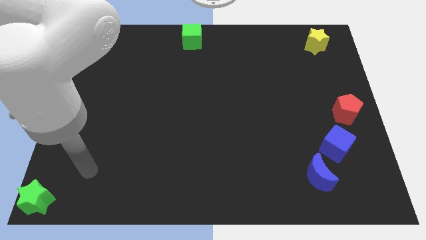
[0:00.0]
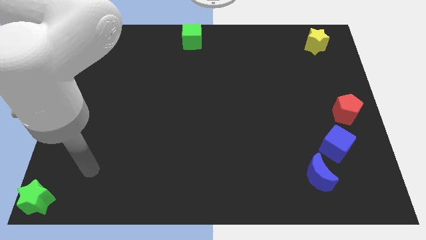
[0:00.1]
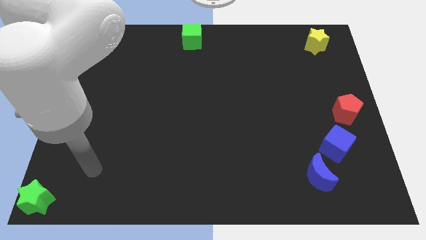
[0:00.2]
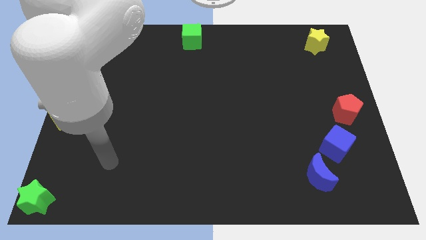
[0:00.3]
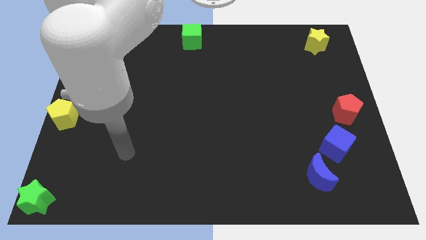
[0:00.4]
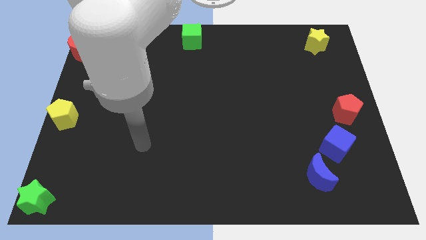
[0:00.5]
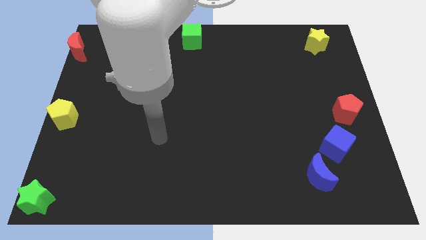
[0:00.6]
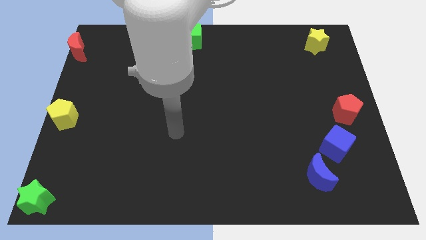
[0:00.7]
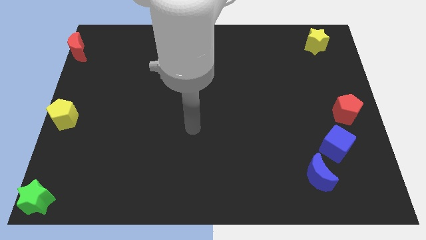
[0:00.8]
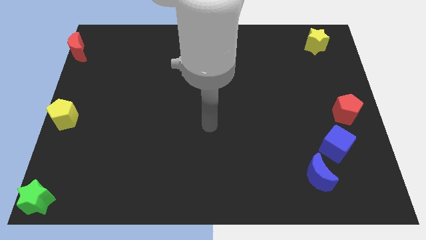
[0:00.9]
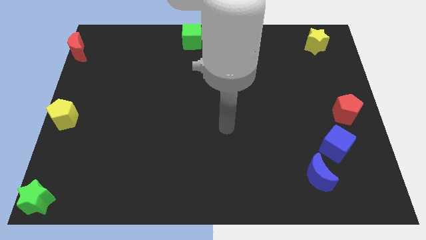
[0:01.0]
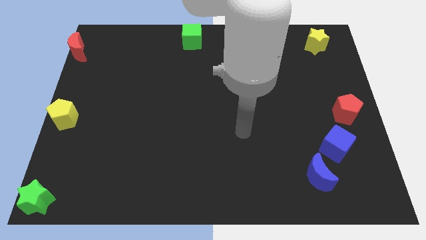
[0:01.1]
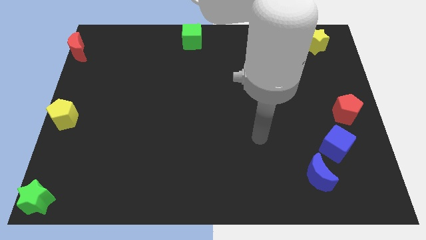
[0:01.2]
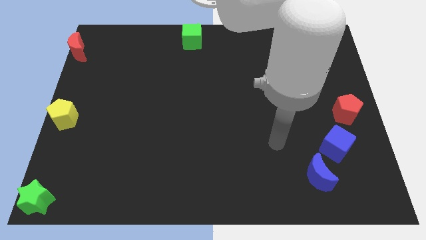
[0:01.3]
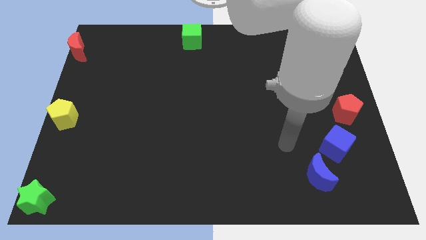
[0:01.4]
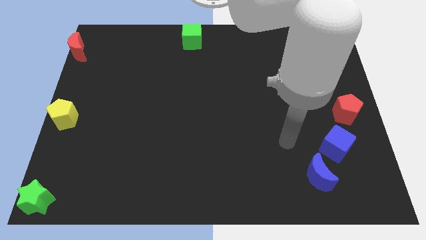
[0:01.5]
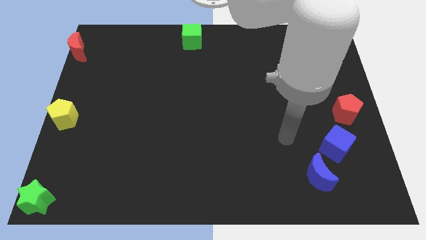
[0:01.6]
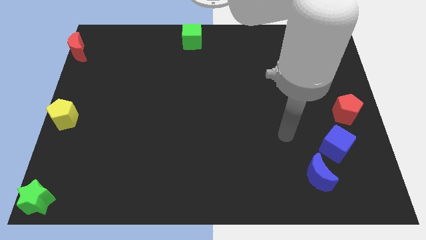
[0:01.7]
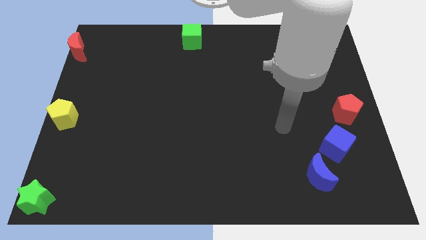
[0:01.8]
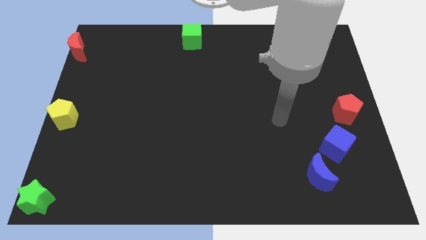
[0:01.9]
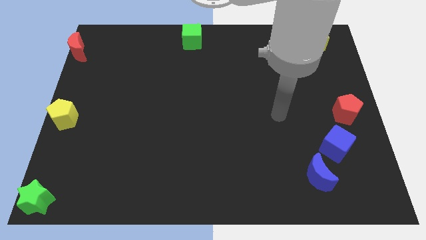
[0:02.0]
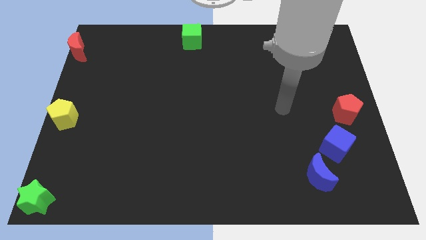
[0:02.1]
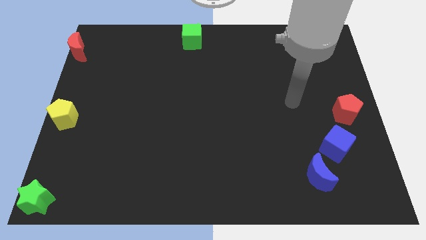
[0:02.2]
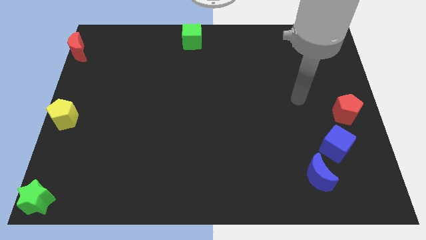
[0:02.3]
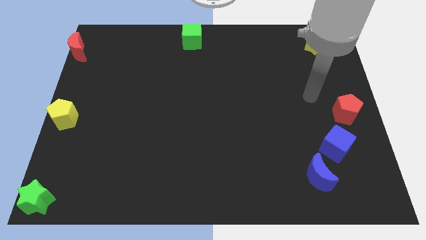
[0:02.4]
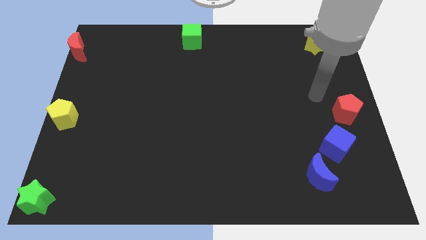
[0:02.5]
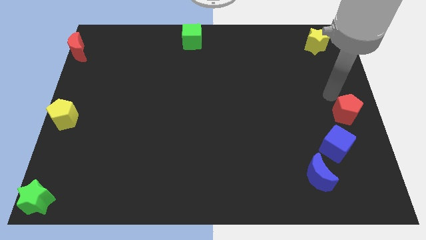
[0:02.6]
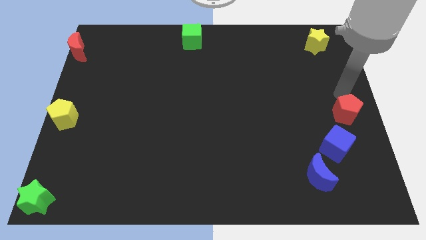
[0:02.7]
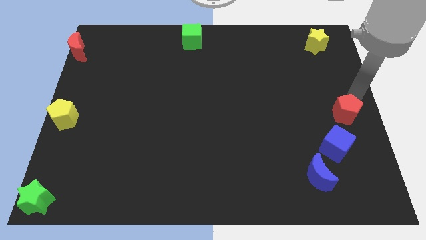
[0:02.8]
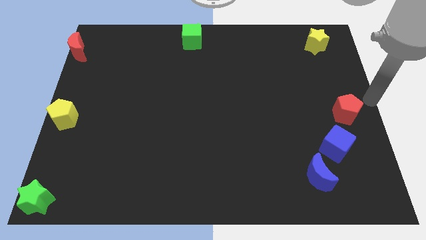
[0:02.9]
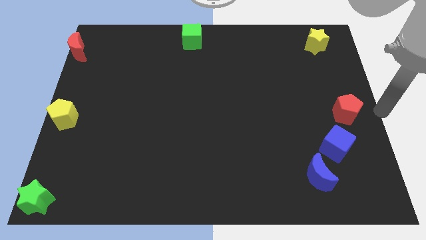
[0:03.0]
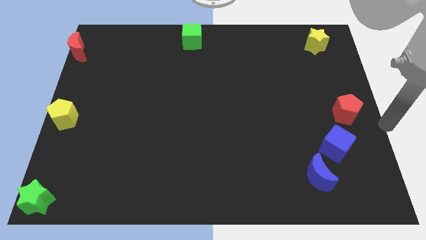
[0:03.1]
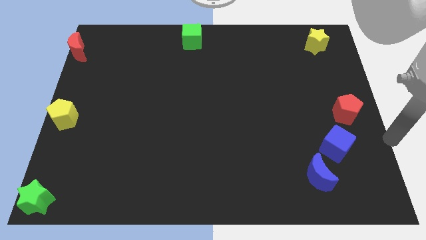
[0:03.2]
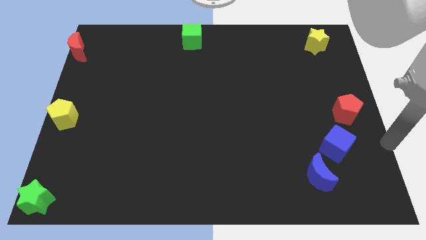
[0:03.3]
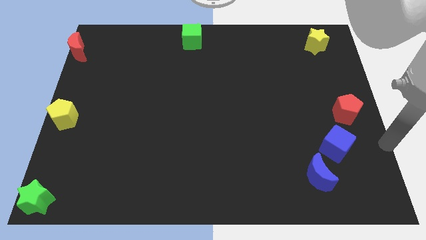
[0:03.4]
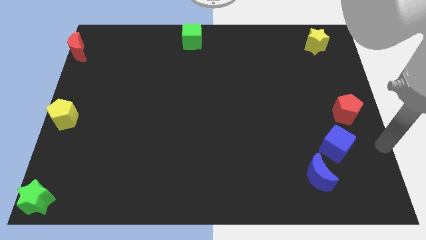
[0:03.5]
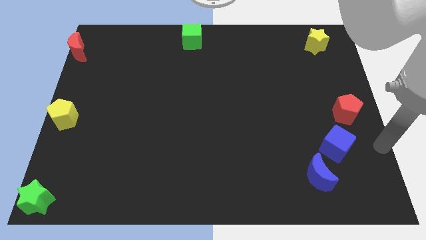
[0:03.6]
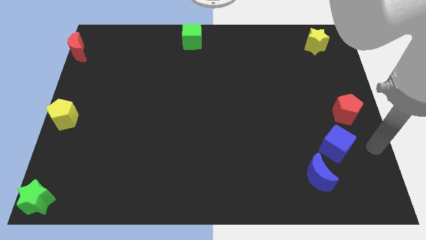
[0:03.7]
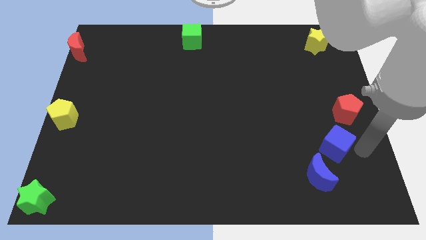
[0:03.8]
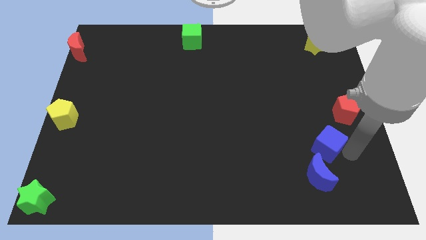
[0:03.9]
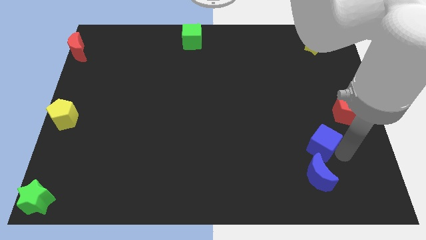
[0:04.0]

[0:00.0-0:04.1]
move arm towards the right side of the blue cube

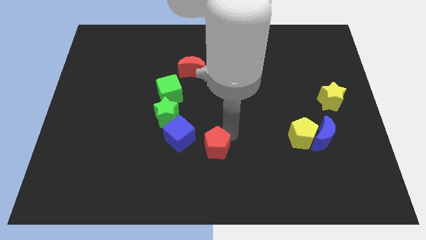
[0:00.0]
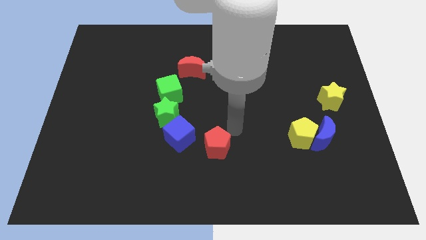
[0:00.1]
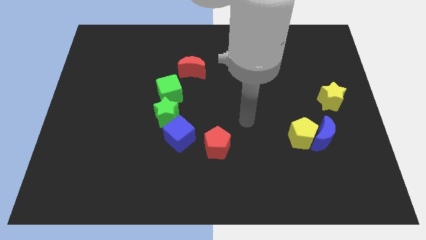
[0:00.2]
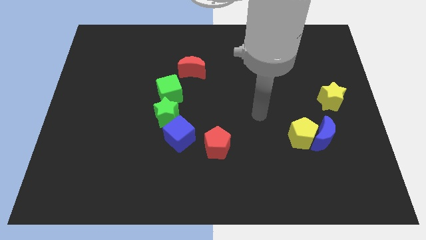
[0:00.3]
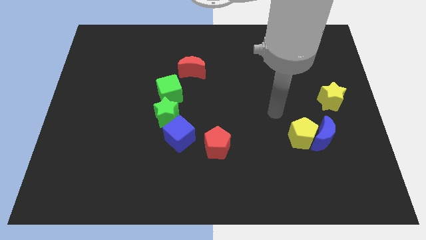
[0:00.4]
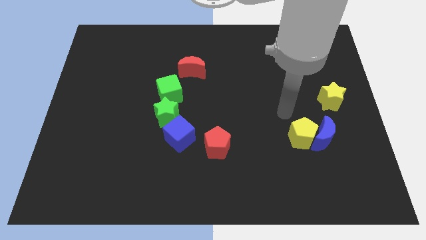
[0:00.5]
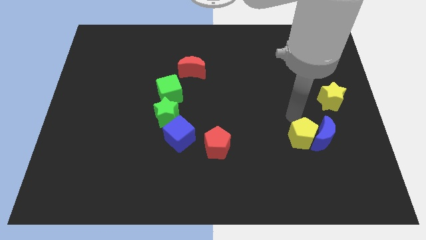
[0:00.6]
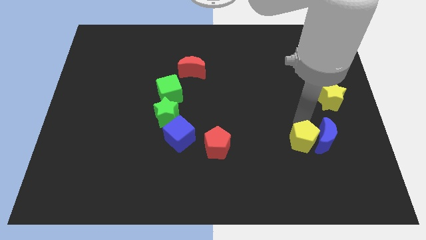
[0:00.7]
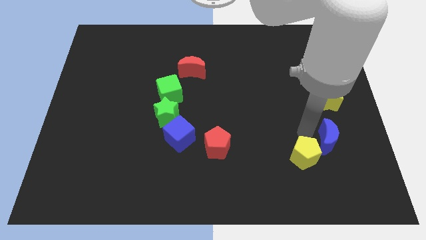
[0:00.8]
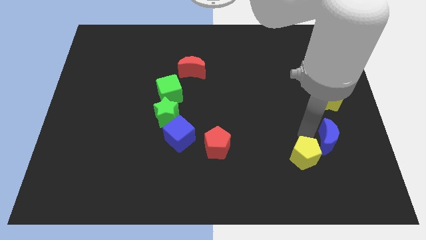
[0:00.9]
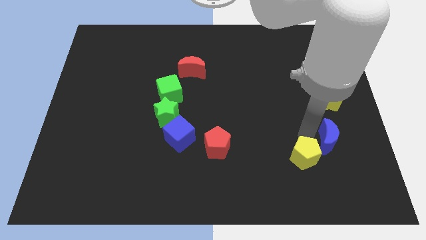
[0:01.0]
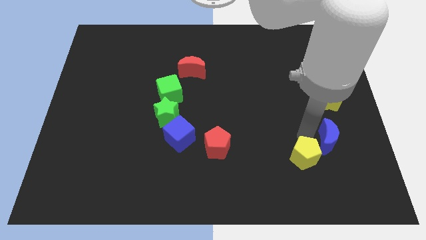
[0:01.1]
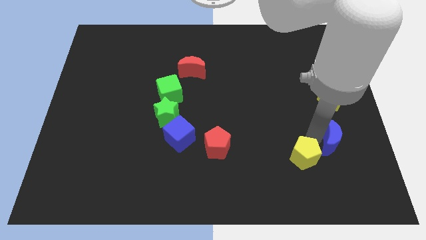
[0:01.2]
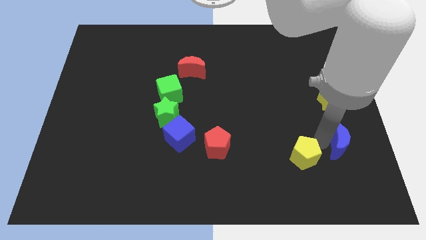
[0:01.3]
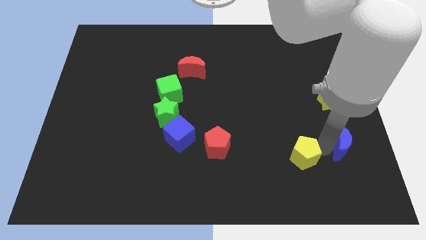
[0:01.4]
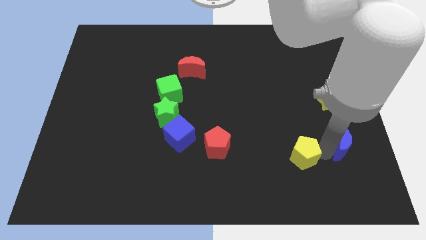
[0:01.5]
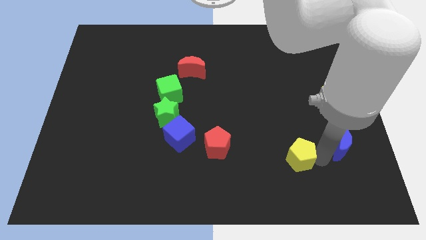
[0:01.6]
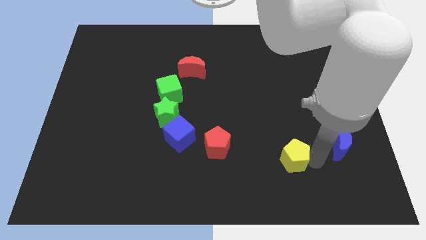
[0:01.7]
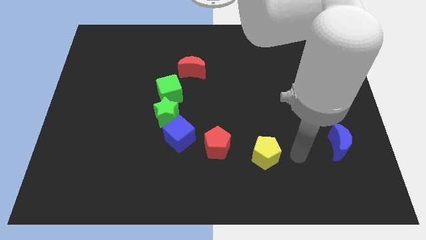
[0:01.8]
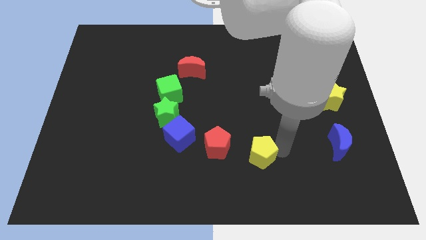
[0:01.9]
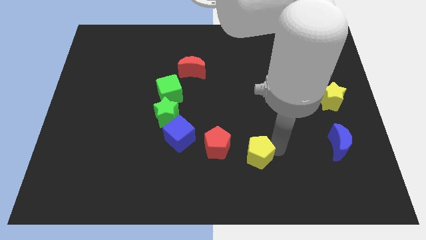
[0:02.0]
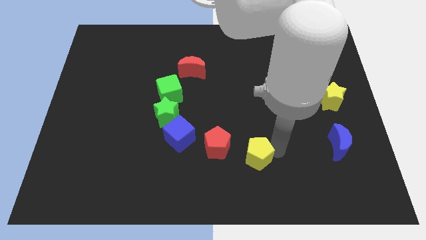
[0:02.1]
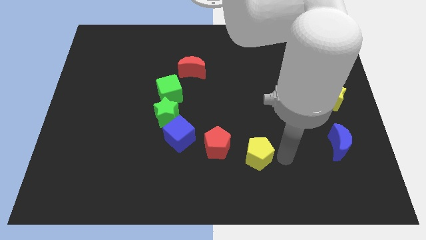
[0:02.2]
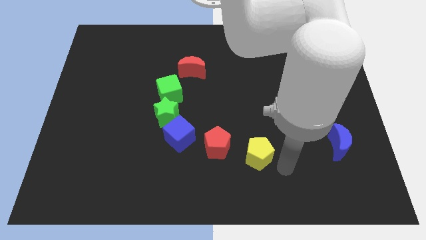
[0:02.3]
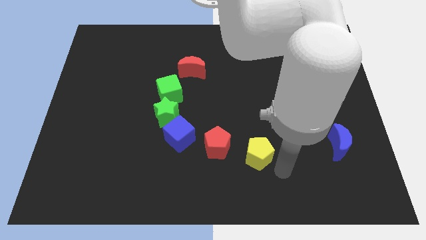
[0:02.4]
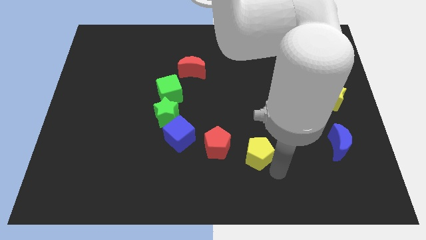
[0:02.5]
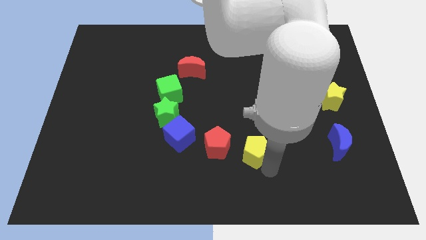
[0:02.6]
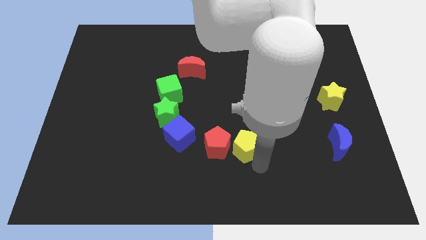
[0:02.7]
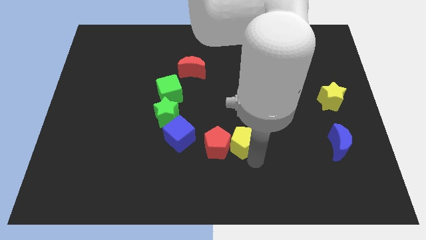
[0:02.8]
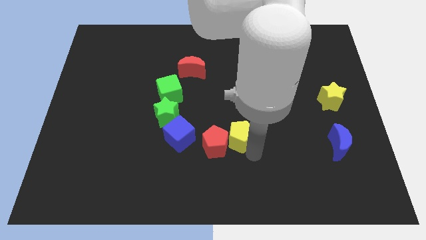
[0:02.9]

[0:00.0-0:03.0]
separate yellow pentagon from blue crescent

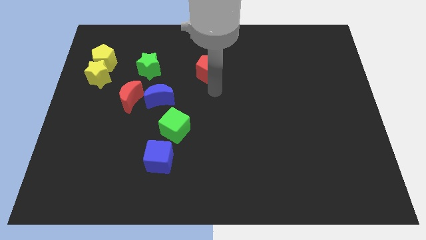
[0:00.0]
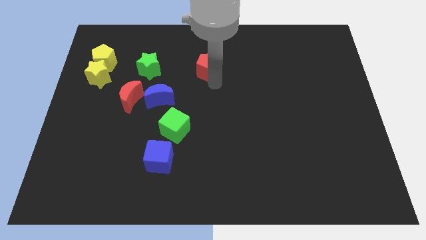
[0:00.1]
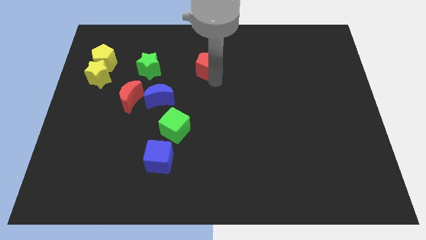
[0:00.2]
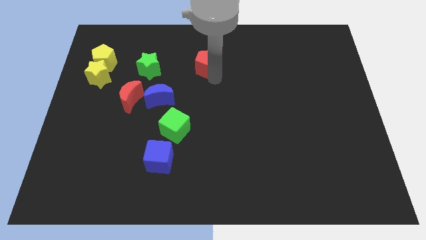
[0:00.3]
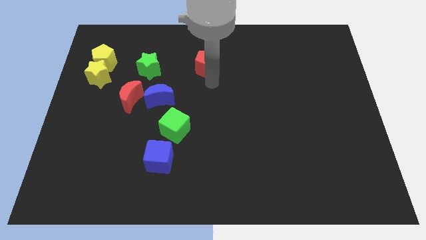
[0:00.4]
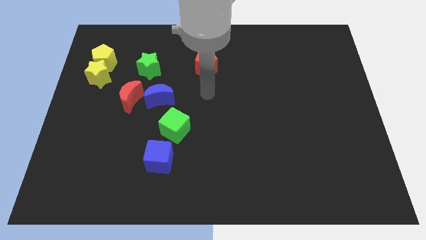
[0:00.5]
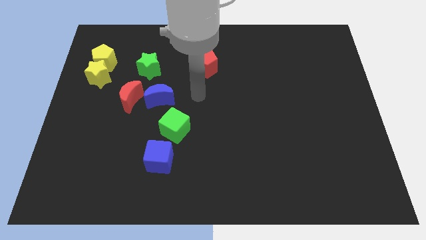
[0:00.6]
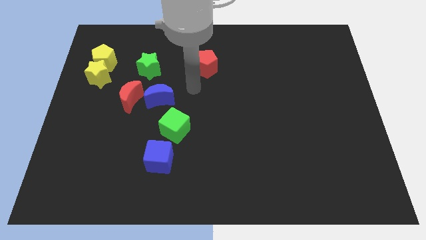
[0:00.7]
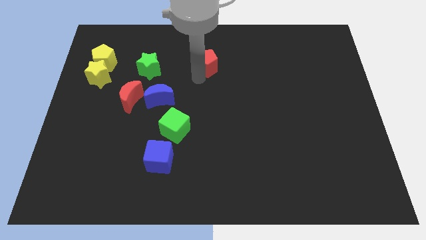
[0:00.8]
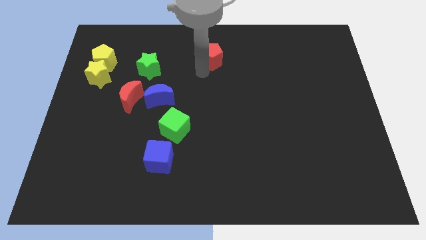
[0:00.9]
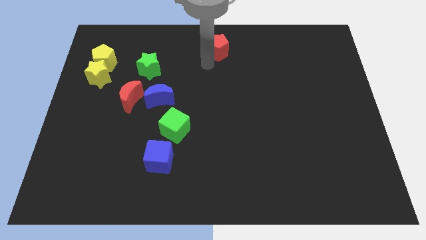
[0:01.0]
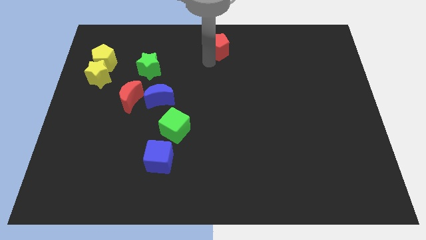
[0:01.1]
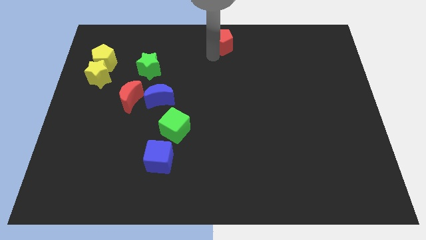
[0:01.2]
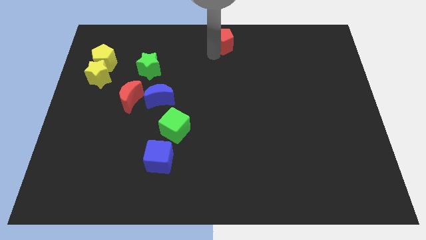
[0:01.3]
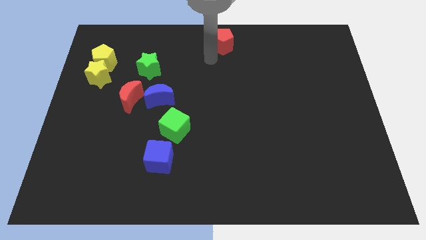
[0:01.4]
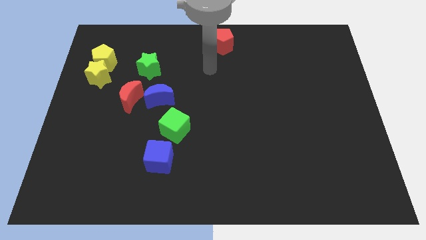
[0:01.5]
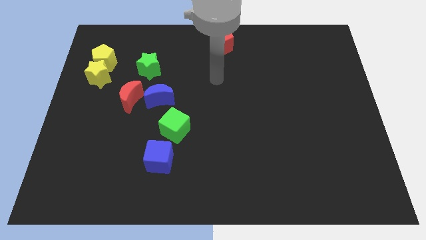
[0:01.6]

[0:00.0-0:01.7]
place the red pentagon at the top center of the board
